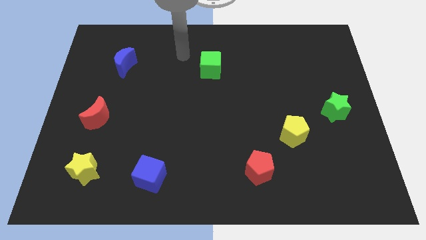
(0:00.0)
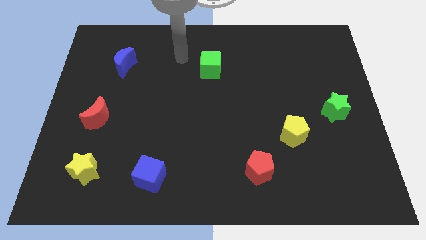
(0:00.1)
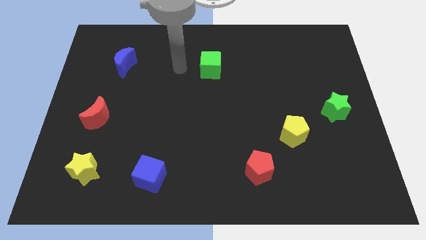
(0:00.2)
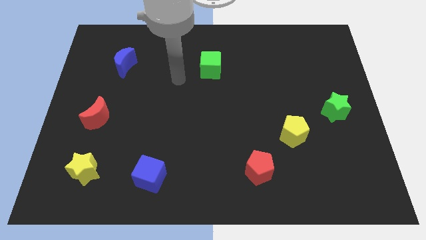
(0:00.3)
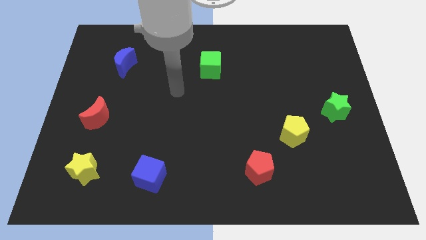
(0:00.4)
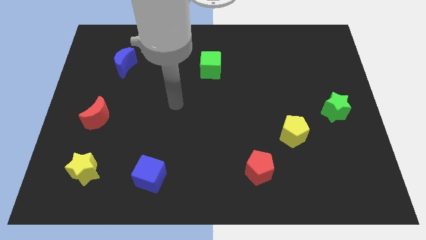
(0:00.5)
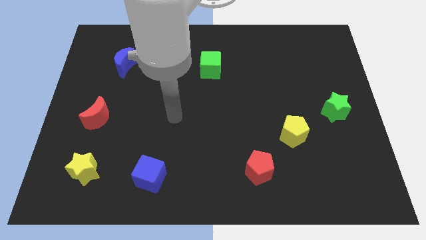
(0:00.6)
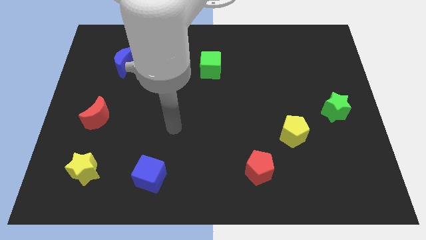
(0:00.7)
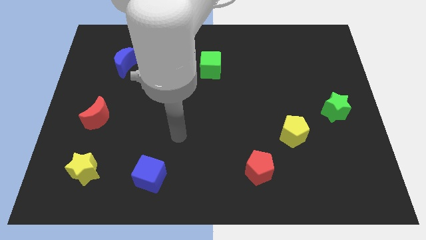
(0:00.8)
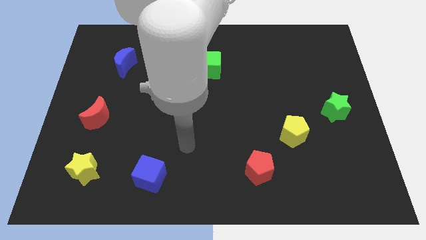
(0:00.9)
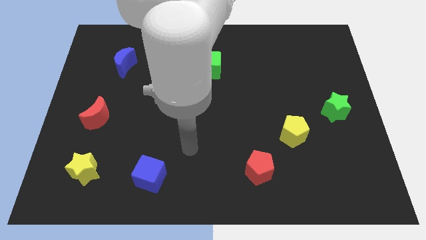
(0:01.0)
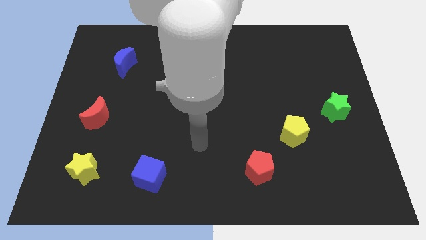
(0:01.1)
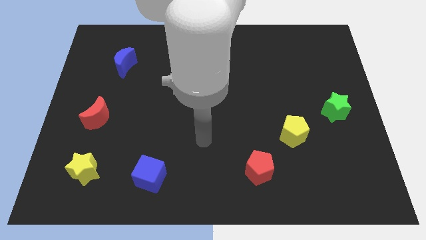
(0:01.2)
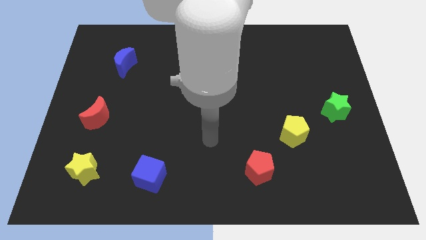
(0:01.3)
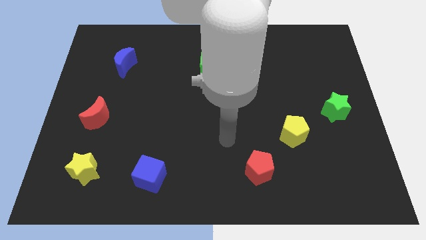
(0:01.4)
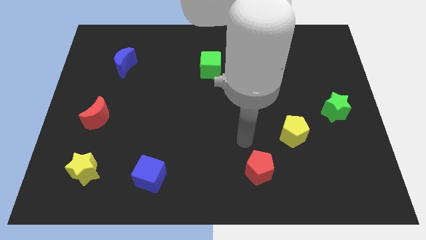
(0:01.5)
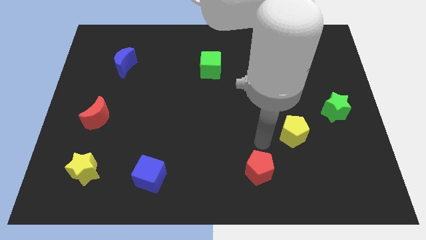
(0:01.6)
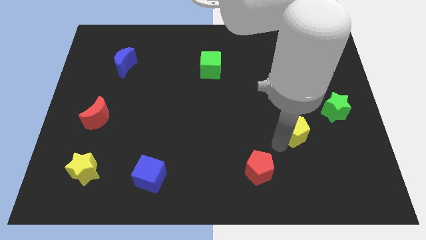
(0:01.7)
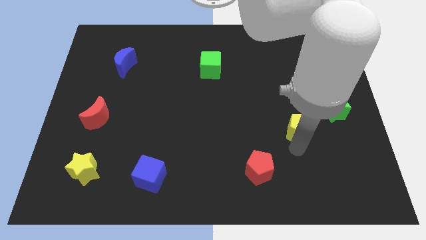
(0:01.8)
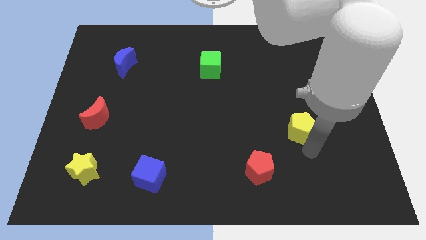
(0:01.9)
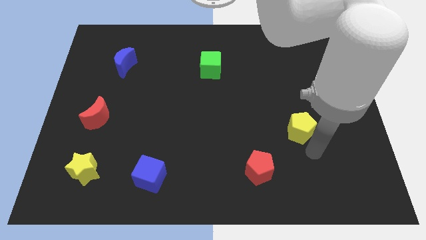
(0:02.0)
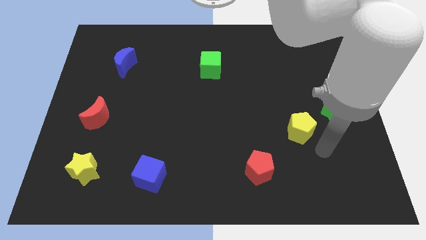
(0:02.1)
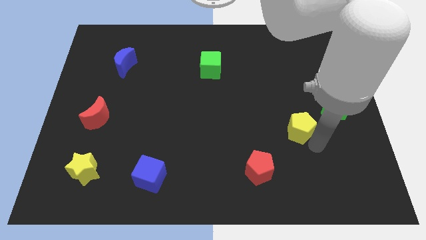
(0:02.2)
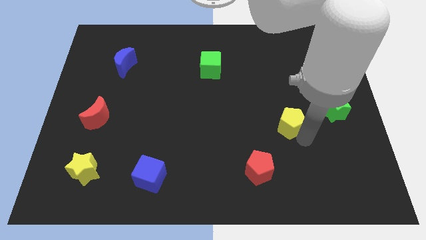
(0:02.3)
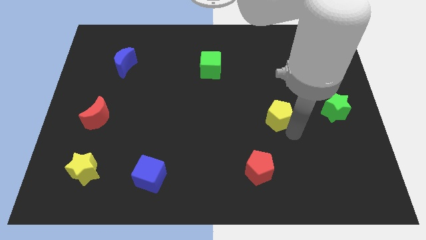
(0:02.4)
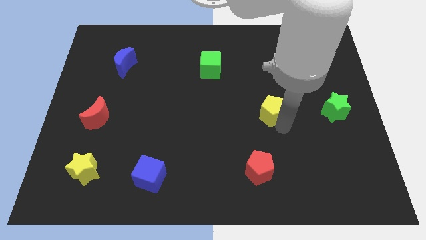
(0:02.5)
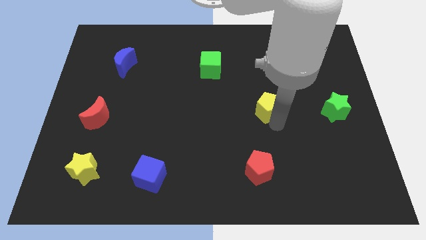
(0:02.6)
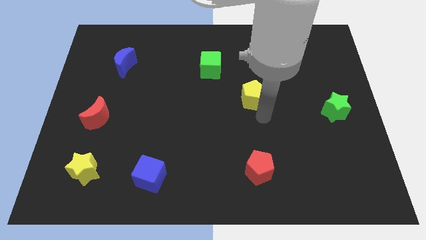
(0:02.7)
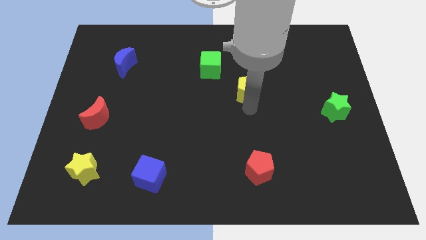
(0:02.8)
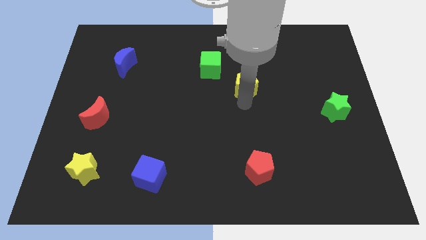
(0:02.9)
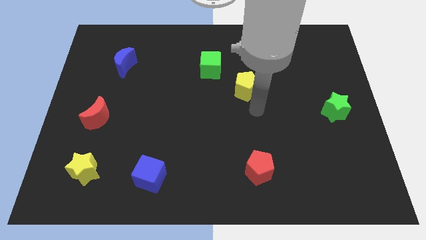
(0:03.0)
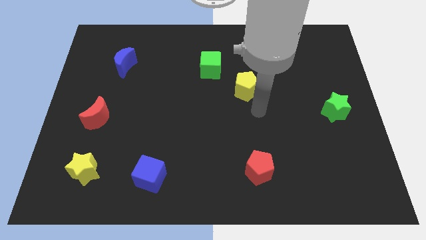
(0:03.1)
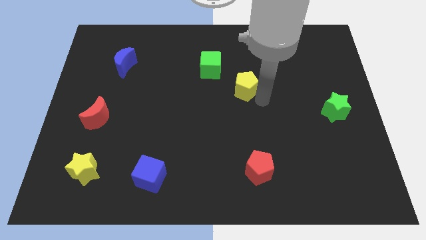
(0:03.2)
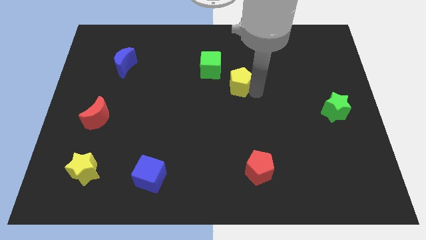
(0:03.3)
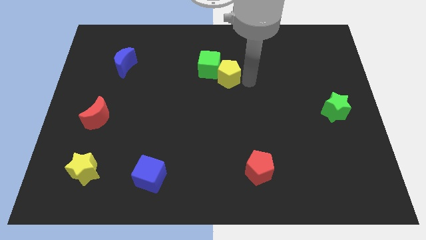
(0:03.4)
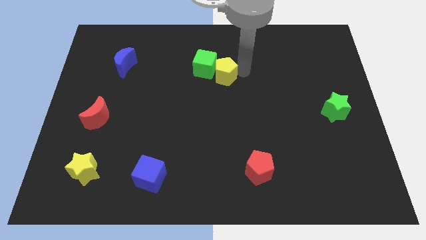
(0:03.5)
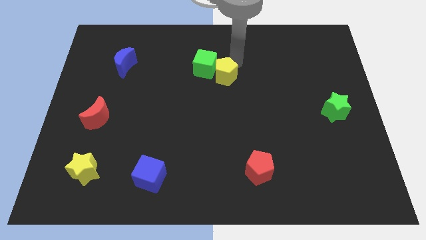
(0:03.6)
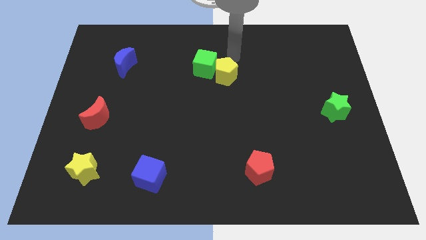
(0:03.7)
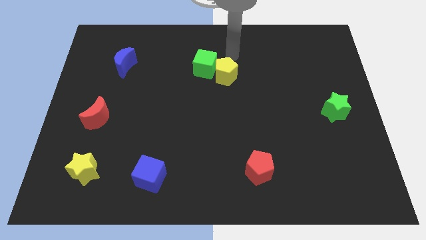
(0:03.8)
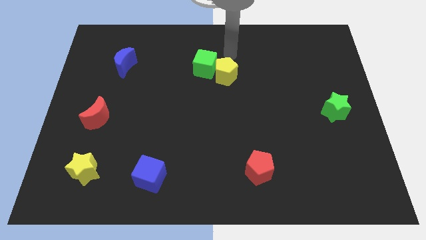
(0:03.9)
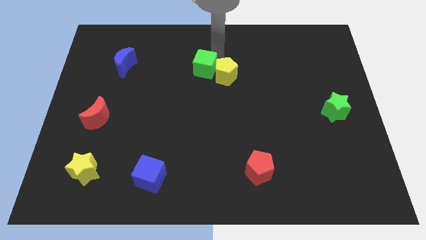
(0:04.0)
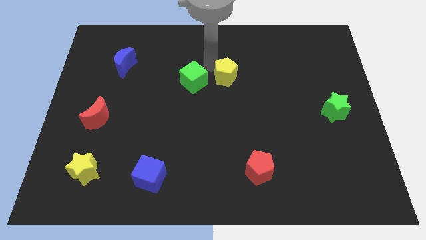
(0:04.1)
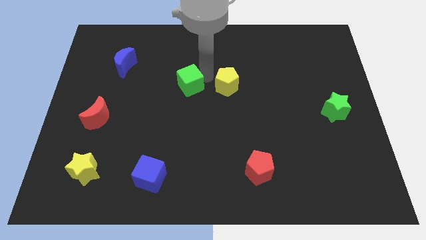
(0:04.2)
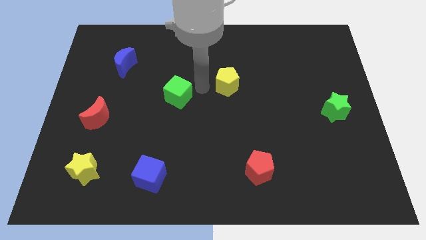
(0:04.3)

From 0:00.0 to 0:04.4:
separate green cube from yellow pentagon

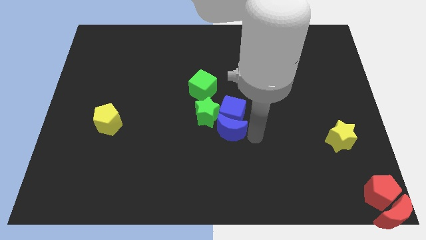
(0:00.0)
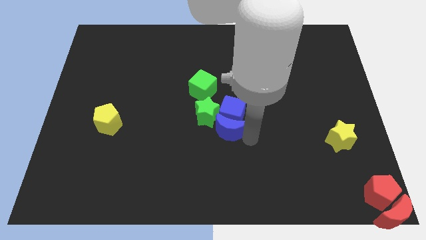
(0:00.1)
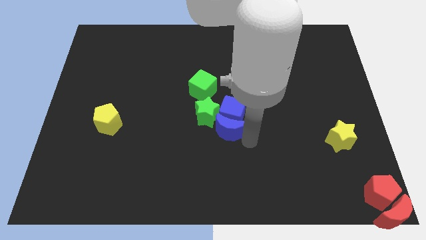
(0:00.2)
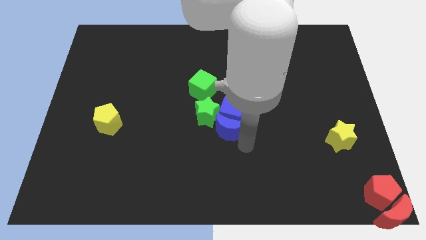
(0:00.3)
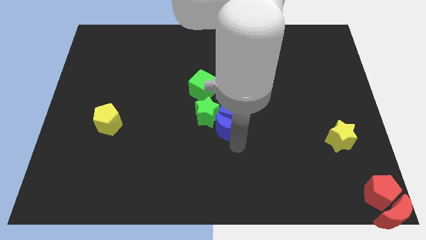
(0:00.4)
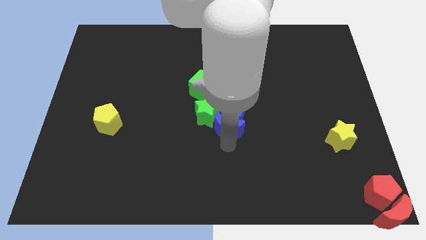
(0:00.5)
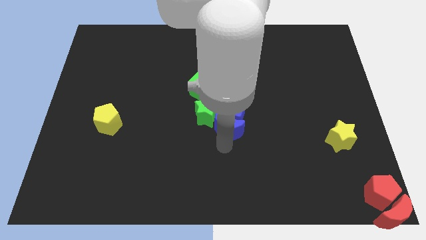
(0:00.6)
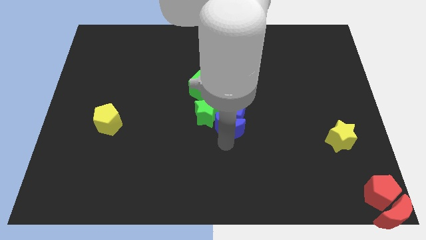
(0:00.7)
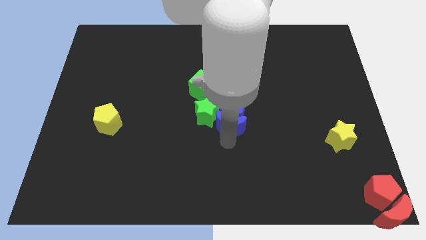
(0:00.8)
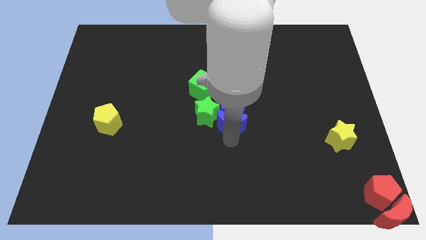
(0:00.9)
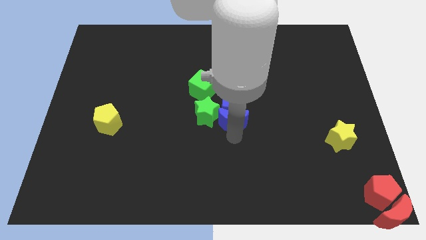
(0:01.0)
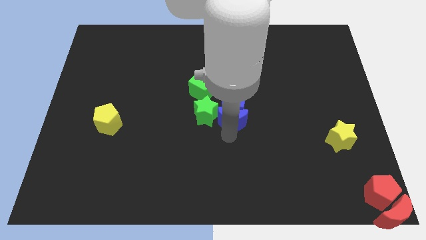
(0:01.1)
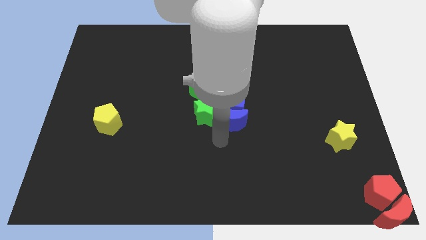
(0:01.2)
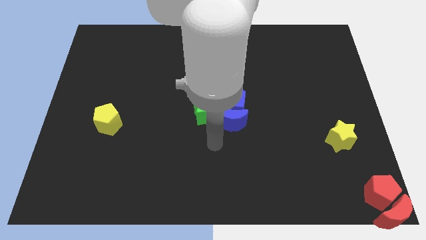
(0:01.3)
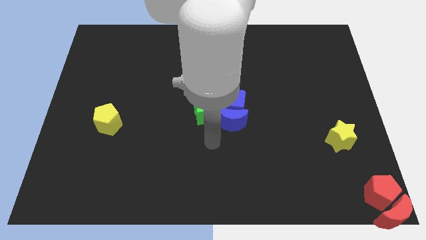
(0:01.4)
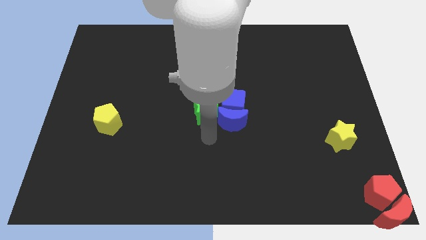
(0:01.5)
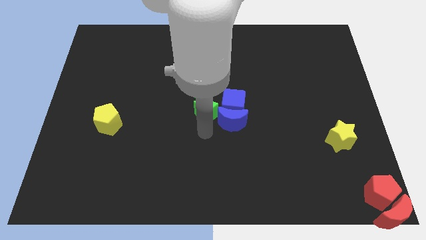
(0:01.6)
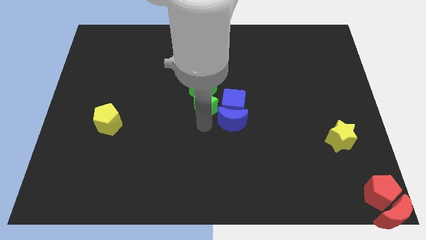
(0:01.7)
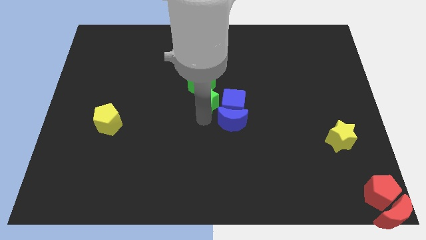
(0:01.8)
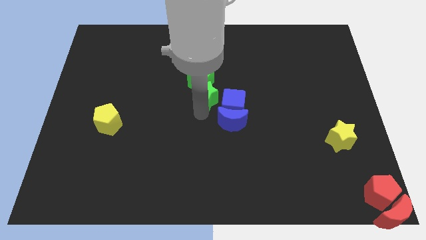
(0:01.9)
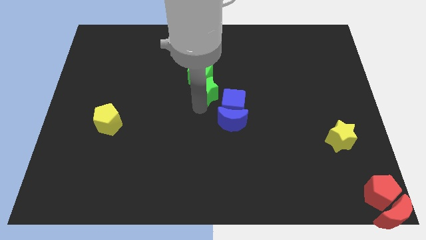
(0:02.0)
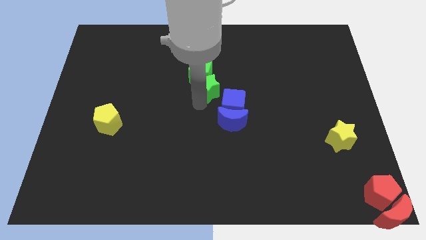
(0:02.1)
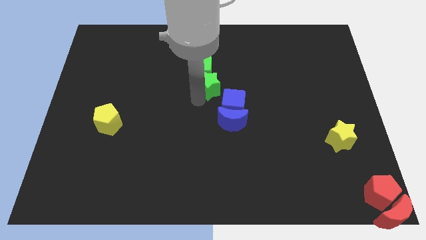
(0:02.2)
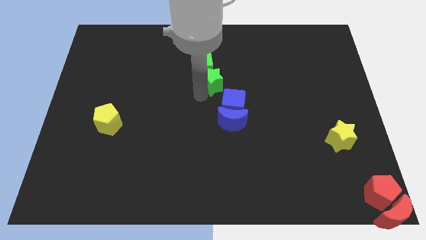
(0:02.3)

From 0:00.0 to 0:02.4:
push the green star into the green cube

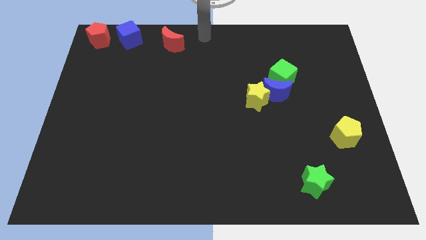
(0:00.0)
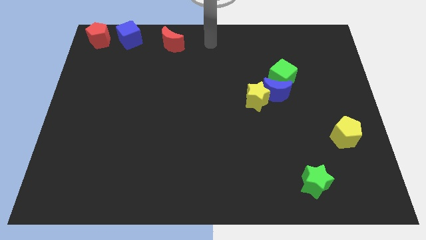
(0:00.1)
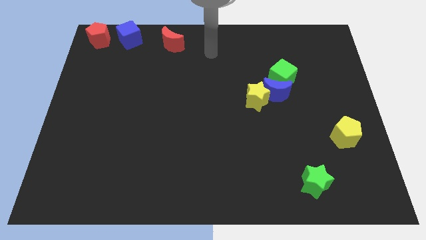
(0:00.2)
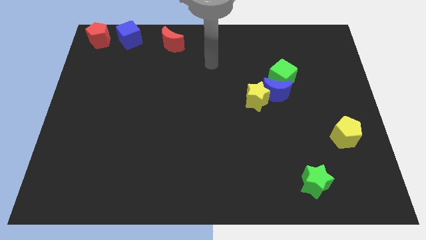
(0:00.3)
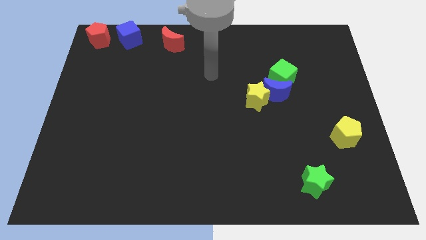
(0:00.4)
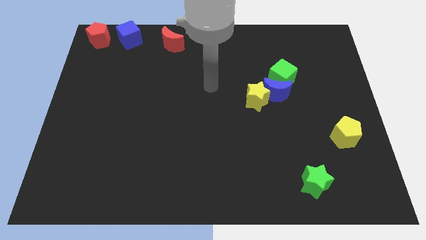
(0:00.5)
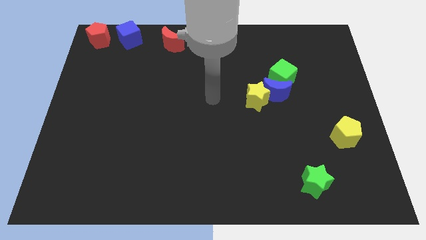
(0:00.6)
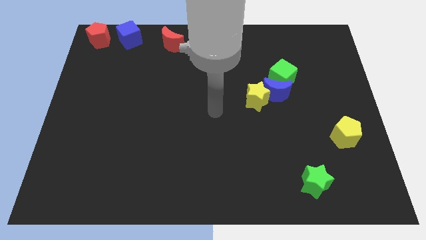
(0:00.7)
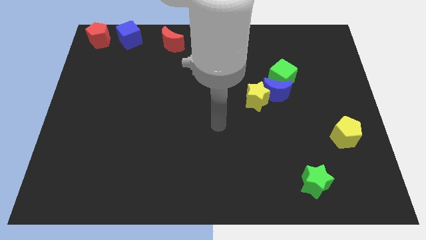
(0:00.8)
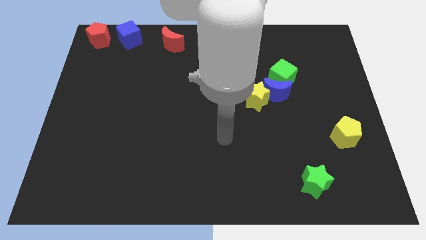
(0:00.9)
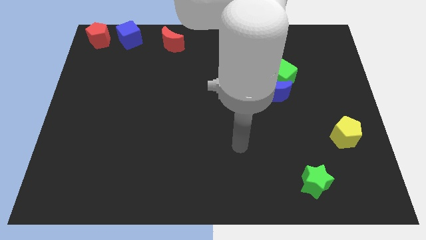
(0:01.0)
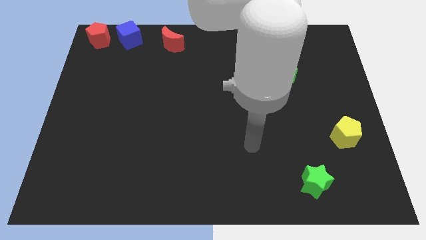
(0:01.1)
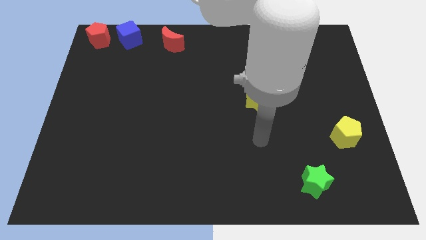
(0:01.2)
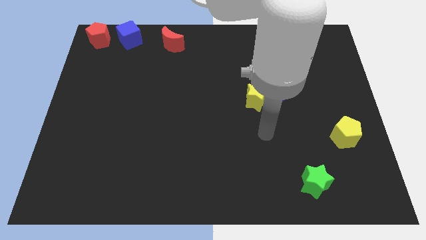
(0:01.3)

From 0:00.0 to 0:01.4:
place your hand under the yellow star

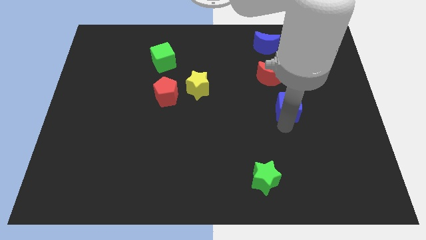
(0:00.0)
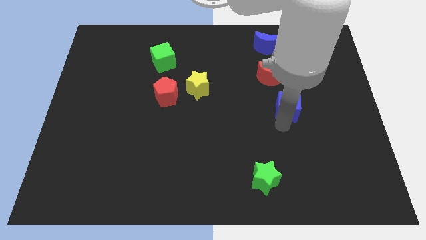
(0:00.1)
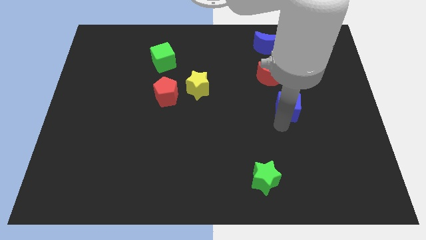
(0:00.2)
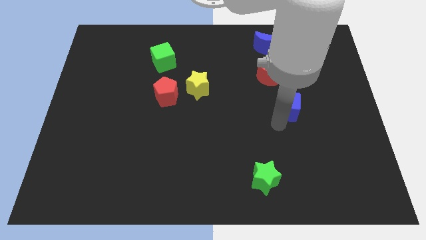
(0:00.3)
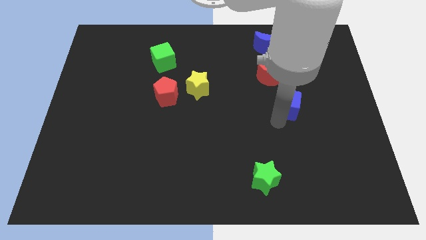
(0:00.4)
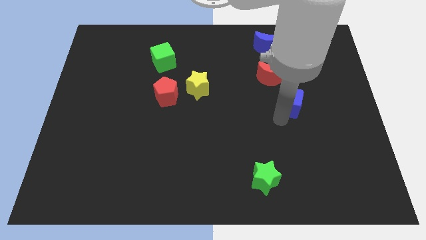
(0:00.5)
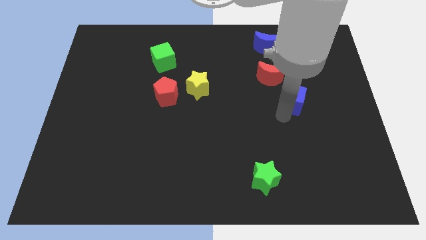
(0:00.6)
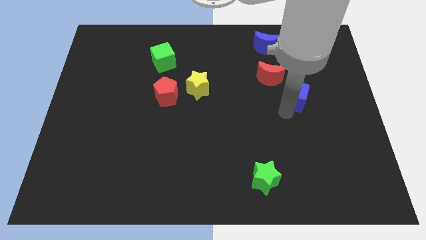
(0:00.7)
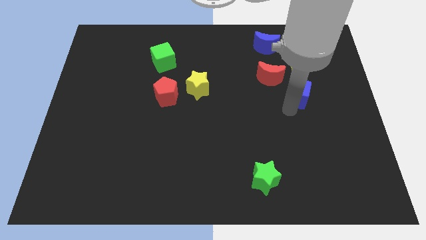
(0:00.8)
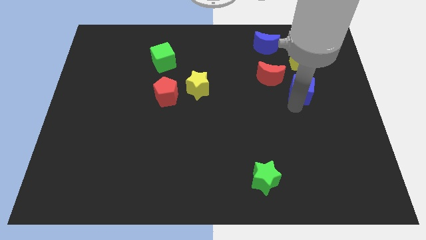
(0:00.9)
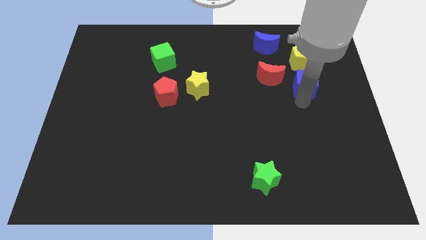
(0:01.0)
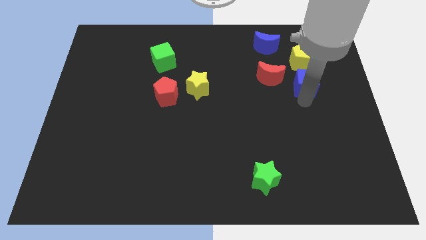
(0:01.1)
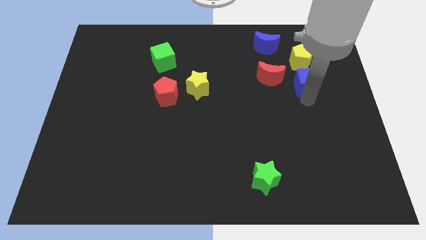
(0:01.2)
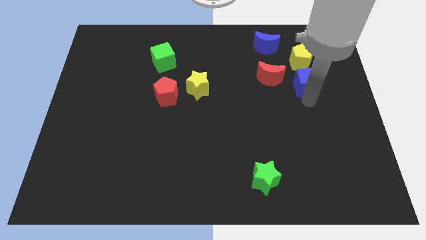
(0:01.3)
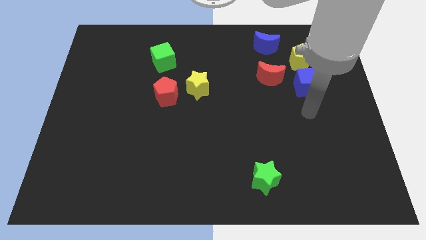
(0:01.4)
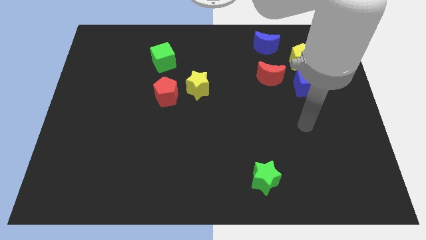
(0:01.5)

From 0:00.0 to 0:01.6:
place the blue cube right of red crescent
